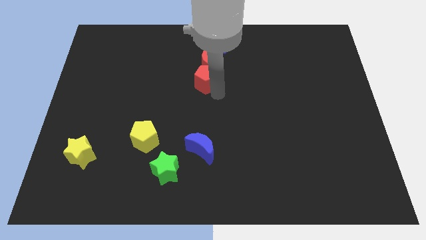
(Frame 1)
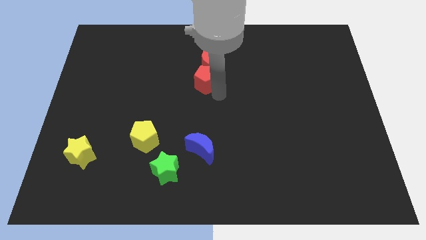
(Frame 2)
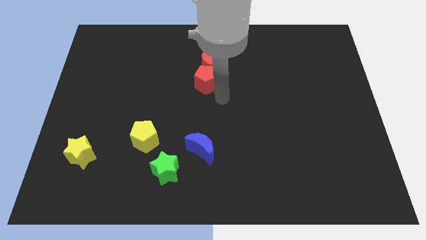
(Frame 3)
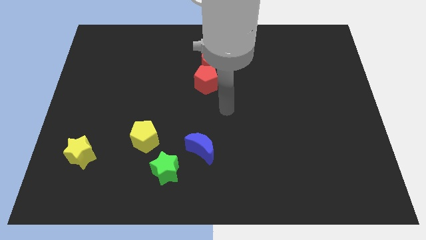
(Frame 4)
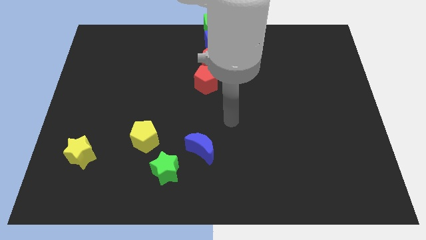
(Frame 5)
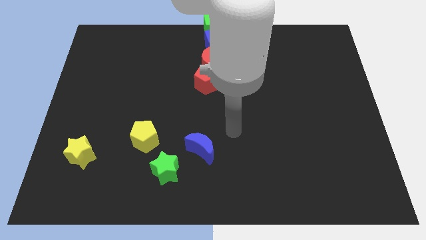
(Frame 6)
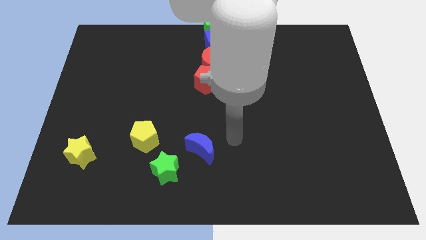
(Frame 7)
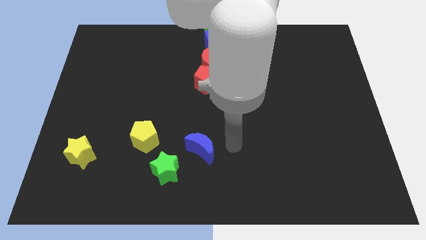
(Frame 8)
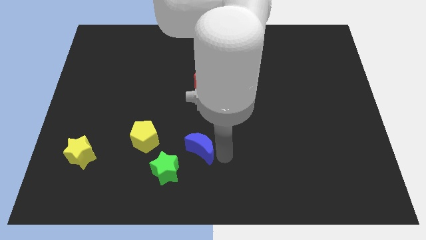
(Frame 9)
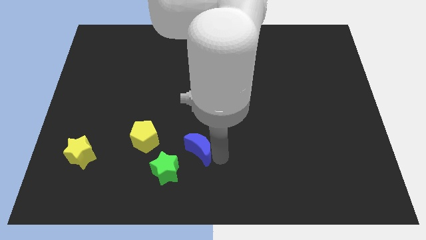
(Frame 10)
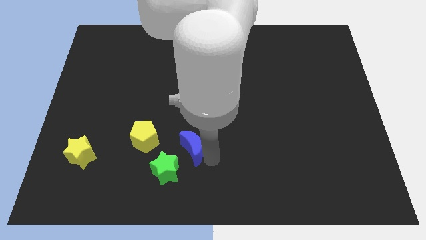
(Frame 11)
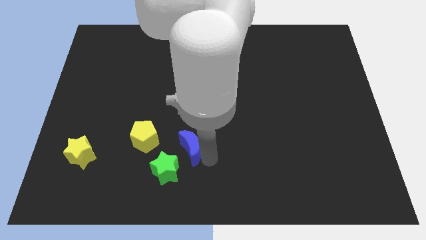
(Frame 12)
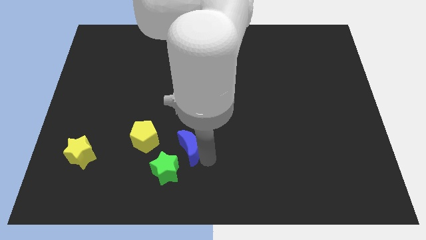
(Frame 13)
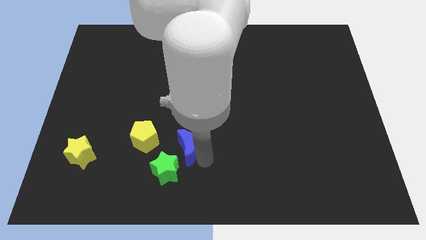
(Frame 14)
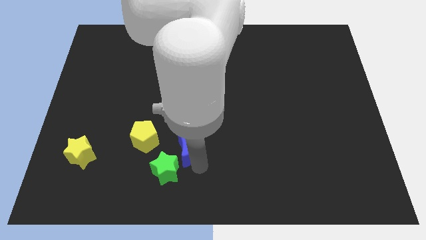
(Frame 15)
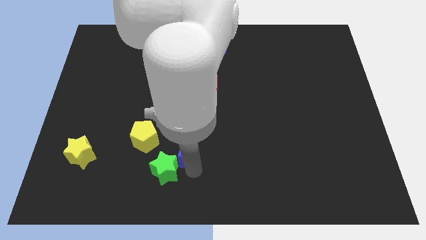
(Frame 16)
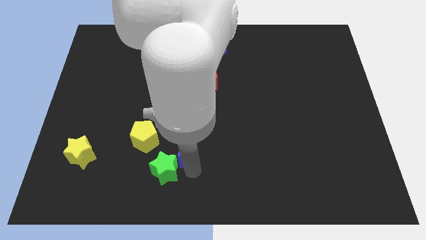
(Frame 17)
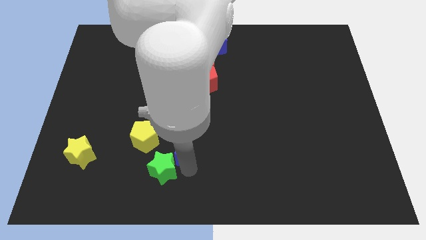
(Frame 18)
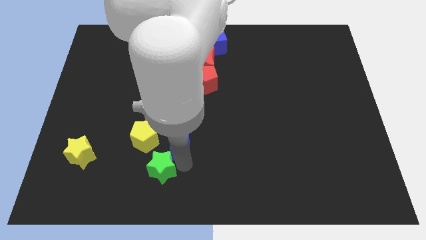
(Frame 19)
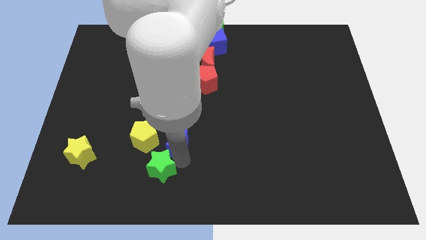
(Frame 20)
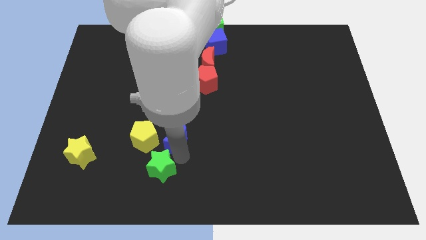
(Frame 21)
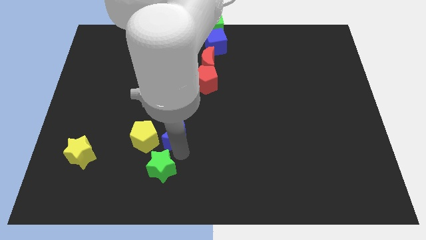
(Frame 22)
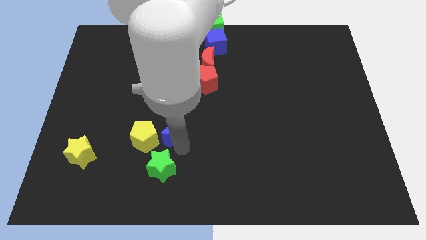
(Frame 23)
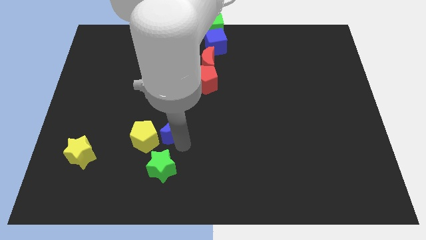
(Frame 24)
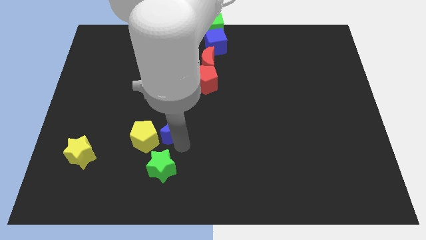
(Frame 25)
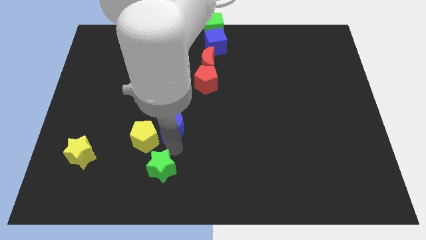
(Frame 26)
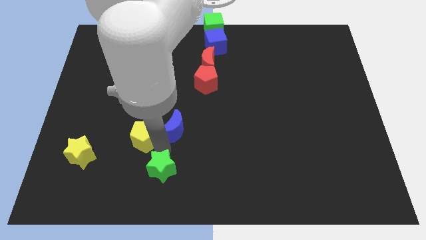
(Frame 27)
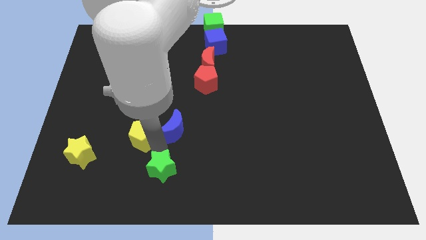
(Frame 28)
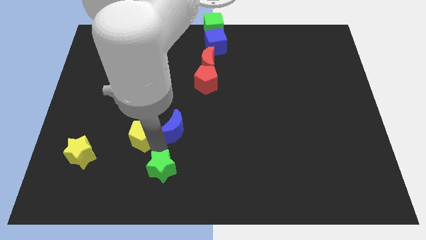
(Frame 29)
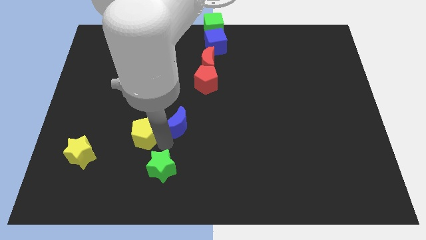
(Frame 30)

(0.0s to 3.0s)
slightly move the blue moon towards top

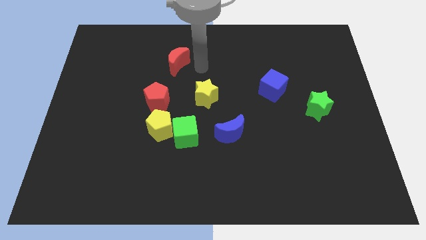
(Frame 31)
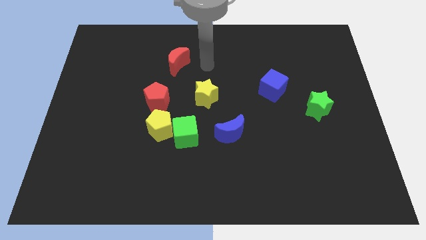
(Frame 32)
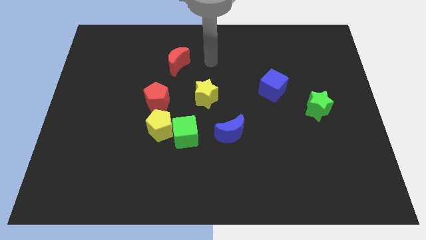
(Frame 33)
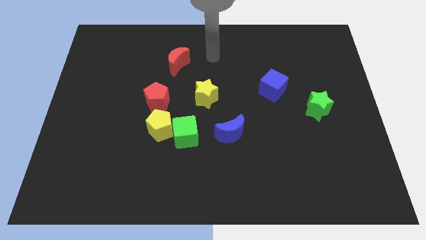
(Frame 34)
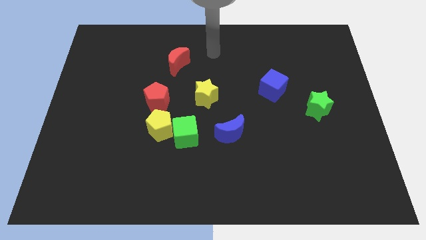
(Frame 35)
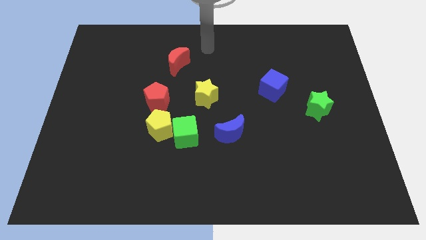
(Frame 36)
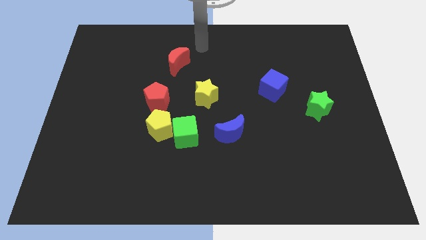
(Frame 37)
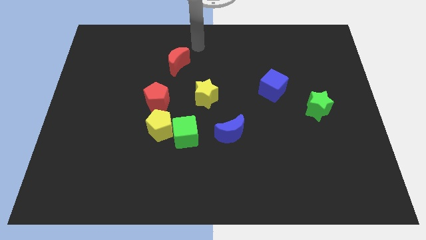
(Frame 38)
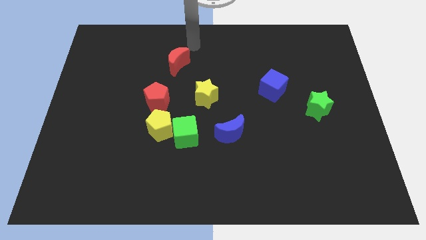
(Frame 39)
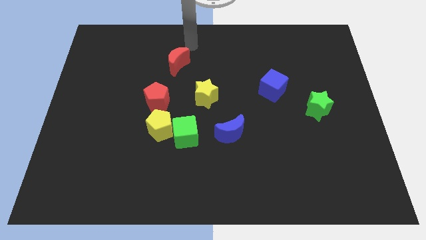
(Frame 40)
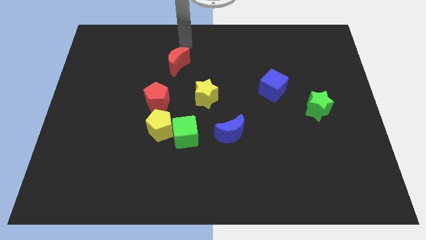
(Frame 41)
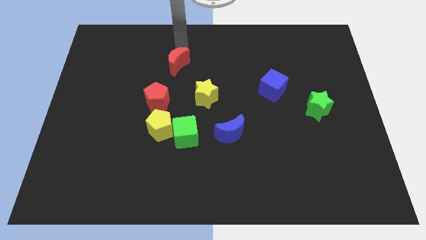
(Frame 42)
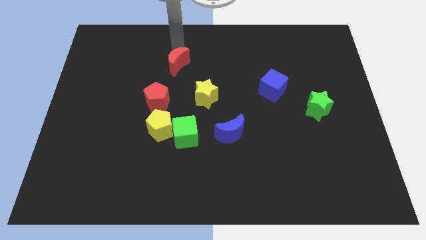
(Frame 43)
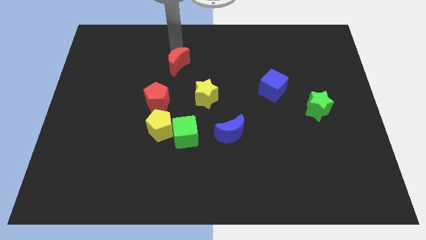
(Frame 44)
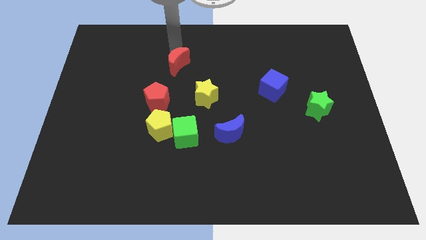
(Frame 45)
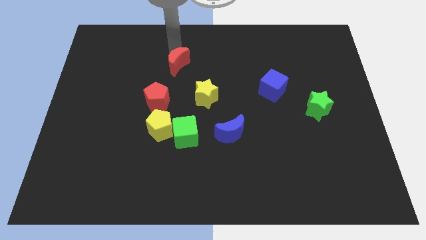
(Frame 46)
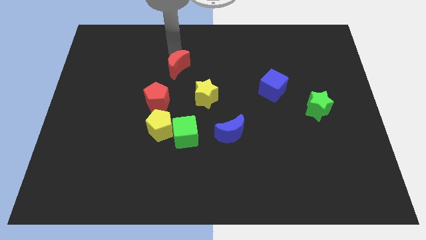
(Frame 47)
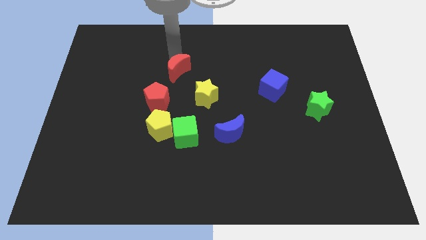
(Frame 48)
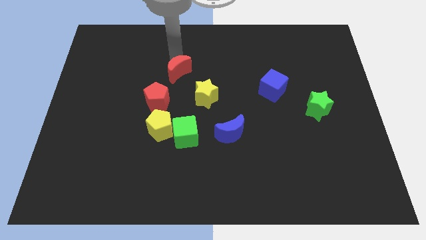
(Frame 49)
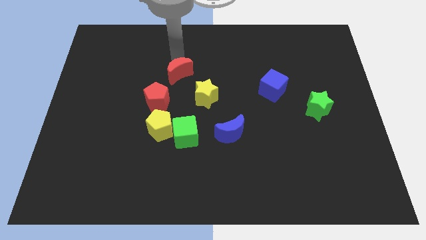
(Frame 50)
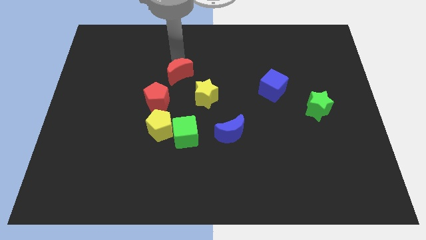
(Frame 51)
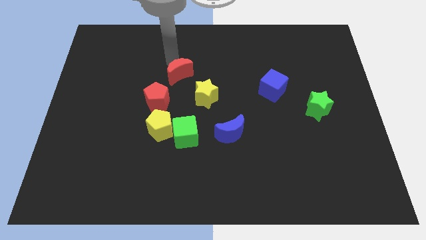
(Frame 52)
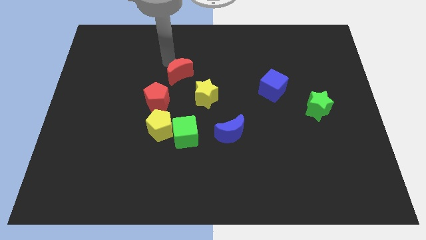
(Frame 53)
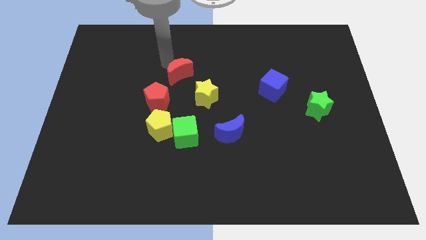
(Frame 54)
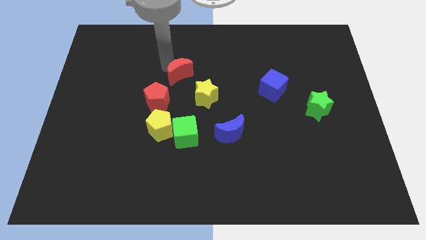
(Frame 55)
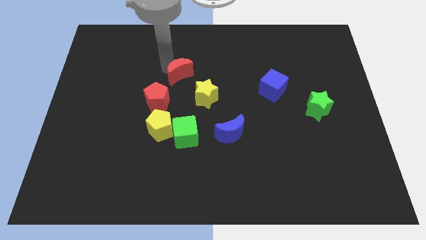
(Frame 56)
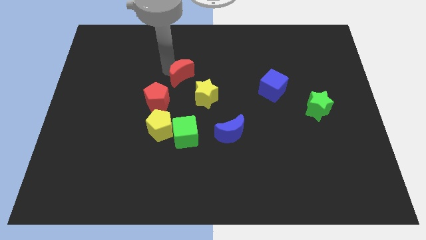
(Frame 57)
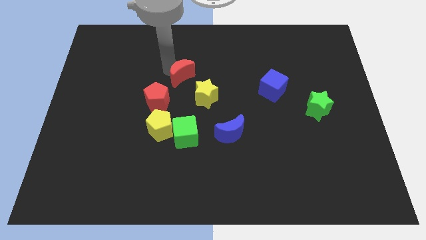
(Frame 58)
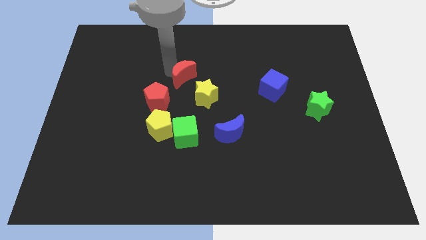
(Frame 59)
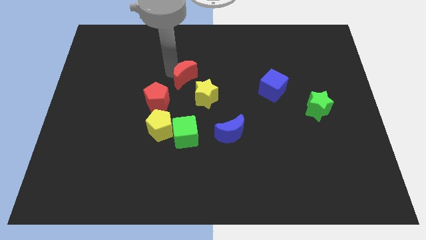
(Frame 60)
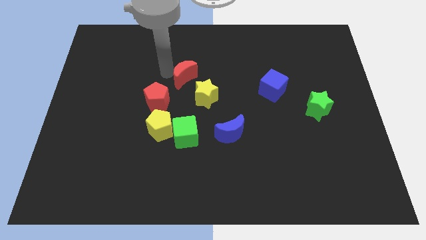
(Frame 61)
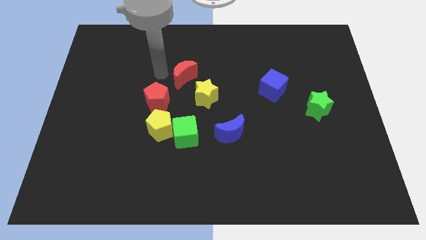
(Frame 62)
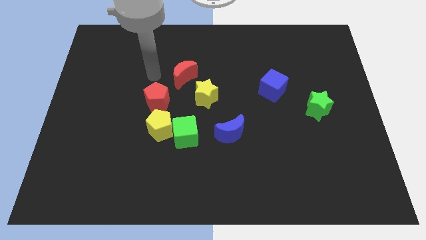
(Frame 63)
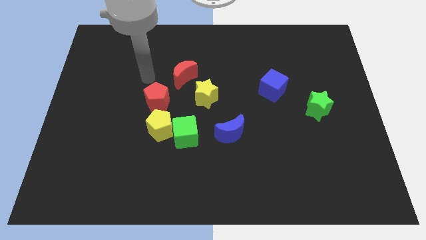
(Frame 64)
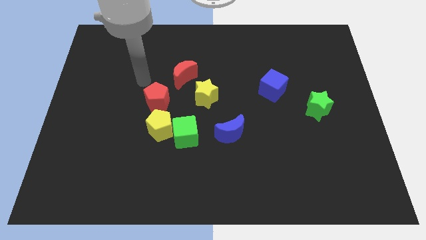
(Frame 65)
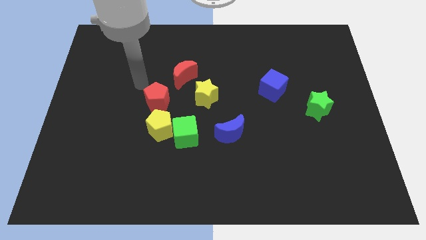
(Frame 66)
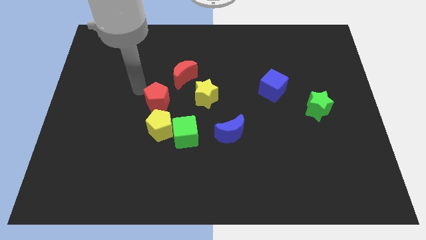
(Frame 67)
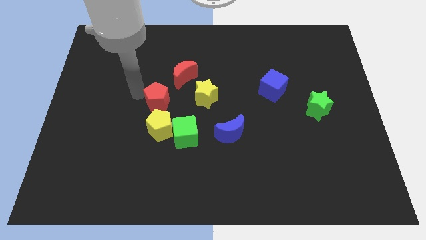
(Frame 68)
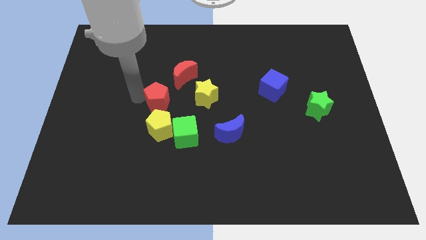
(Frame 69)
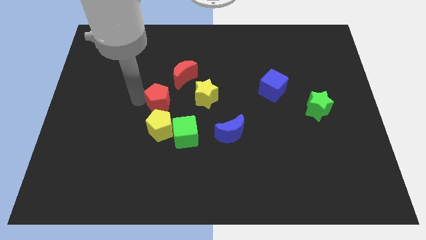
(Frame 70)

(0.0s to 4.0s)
move red moon left above the yellow star

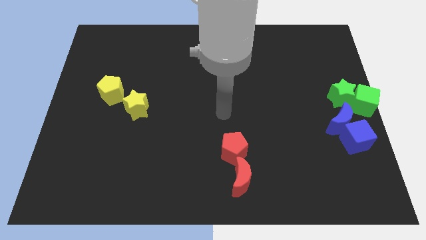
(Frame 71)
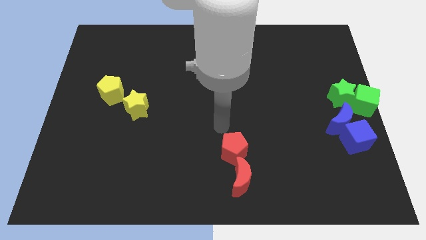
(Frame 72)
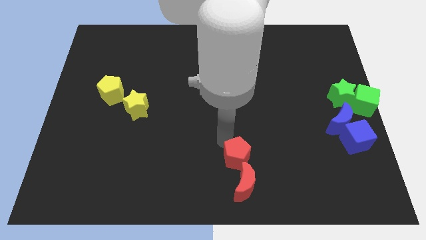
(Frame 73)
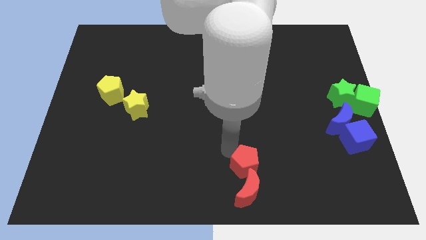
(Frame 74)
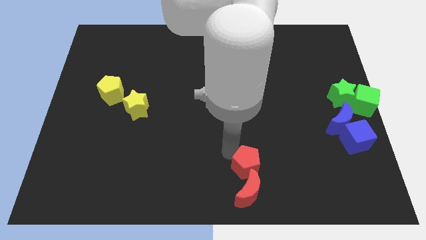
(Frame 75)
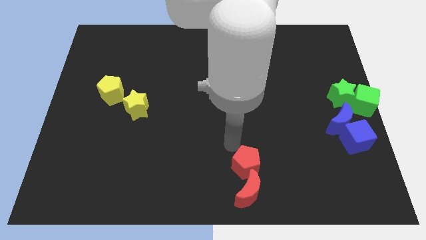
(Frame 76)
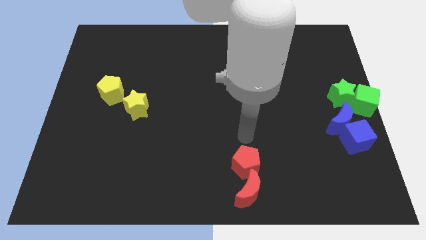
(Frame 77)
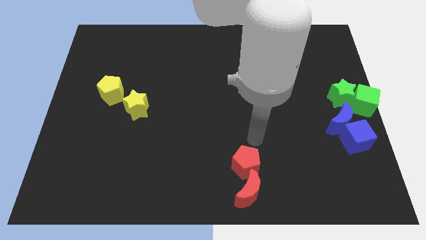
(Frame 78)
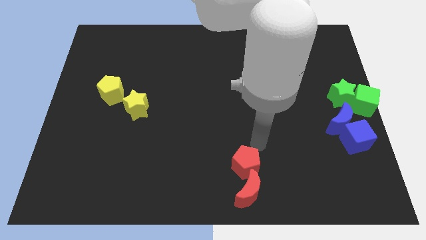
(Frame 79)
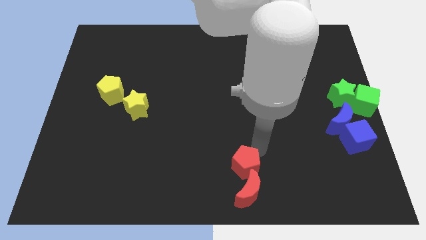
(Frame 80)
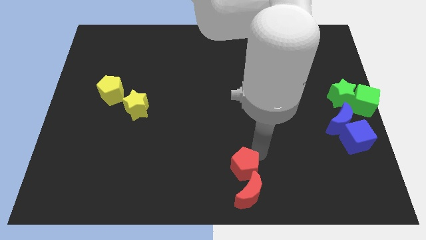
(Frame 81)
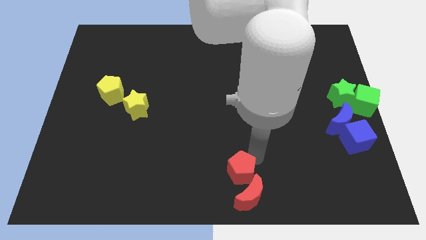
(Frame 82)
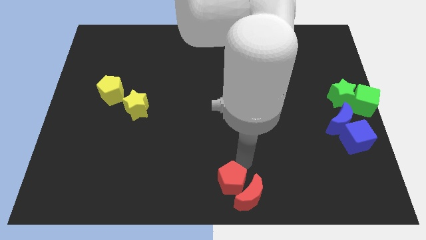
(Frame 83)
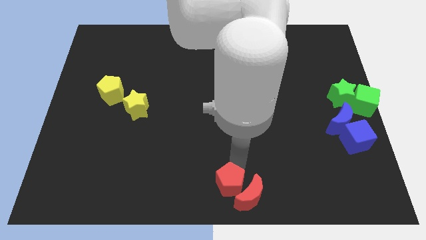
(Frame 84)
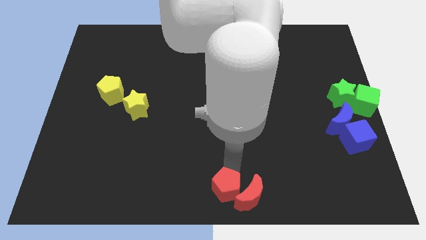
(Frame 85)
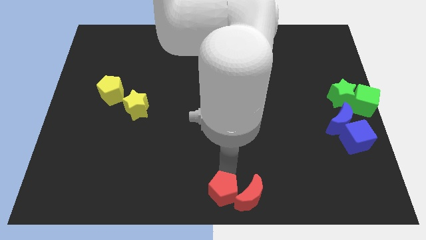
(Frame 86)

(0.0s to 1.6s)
push red pentagon along with the red moon to the bottom center

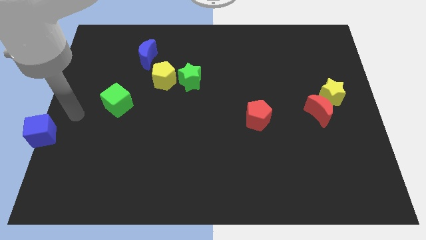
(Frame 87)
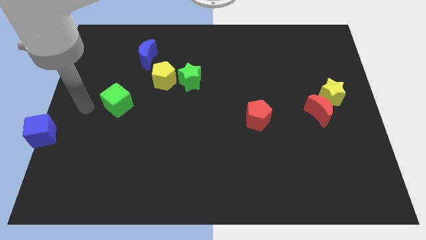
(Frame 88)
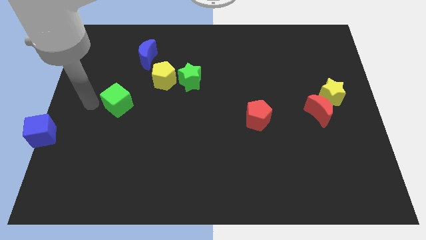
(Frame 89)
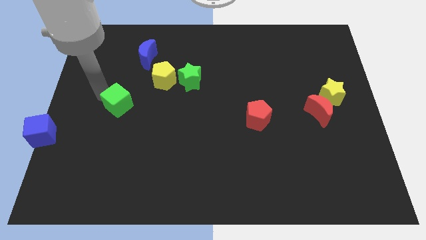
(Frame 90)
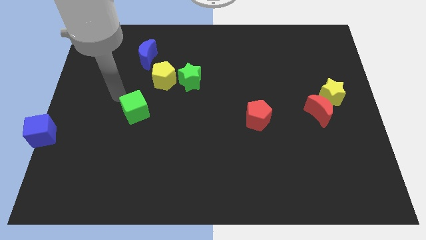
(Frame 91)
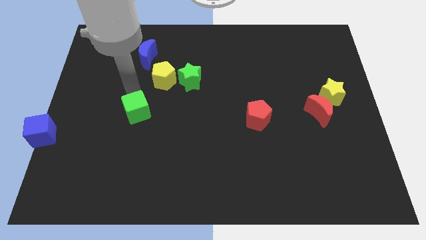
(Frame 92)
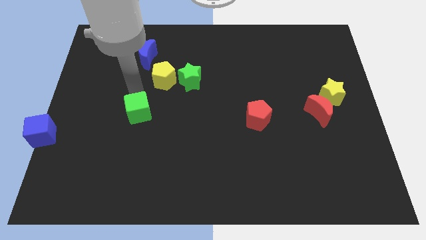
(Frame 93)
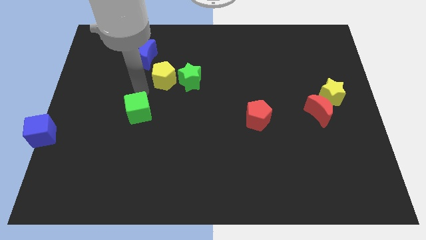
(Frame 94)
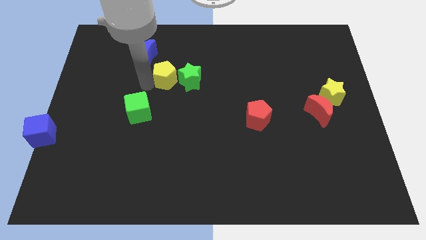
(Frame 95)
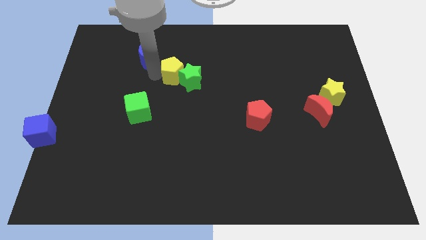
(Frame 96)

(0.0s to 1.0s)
place the green cube below the blue crescent
